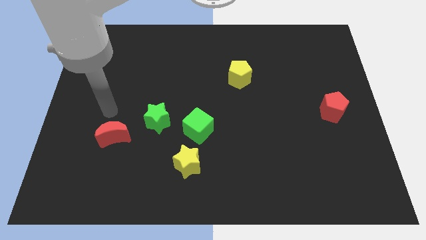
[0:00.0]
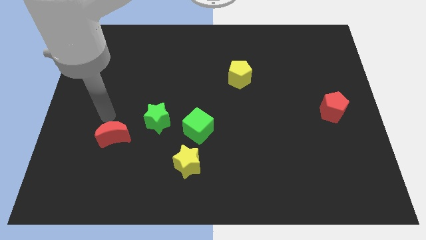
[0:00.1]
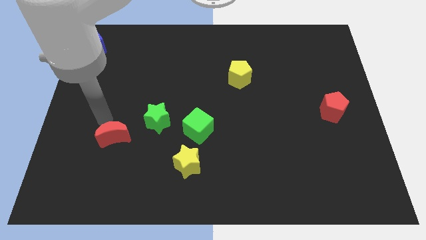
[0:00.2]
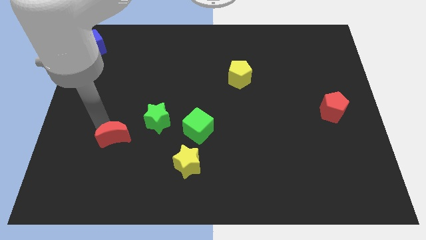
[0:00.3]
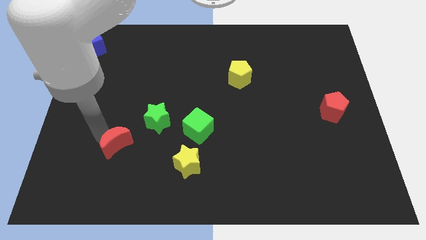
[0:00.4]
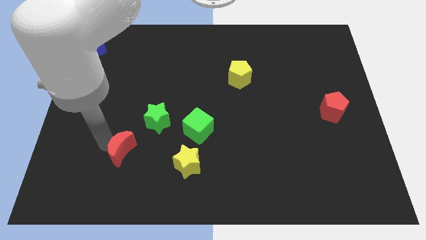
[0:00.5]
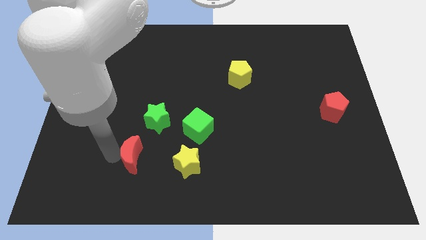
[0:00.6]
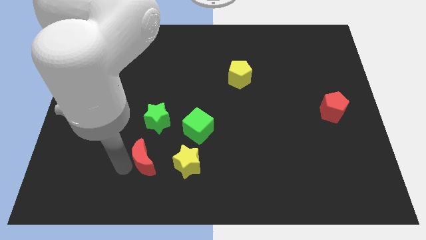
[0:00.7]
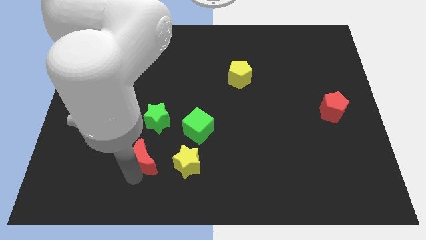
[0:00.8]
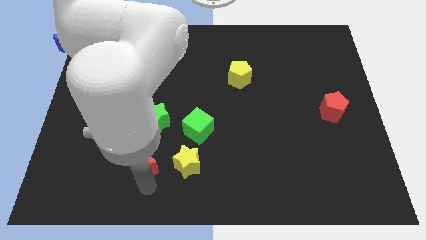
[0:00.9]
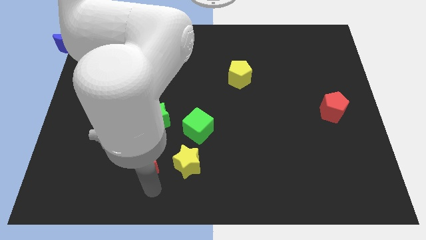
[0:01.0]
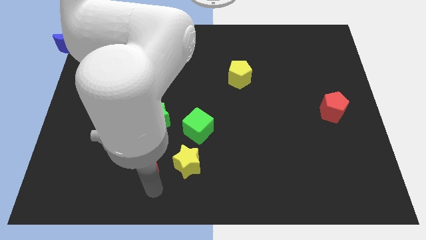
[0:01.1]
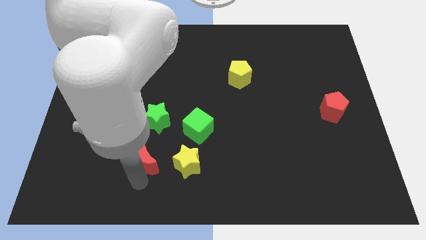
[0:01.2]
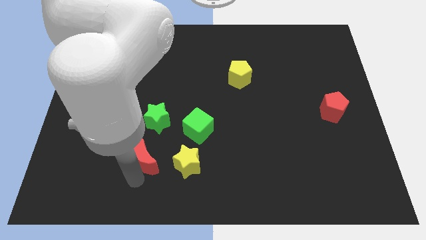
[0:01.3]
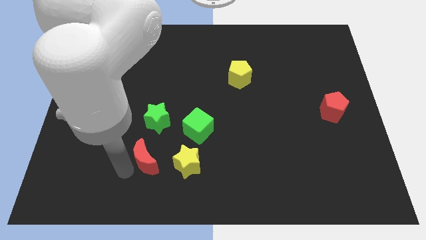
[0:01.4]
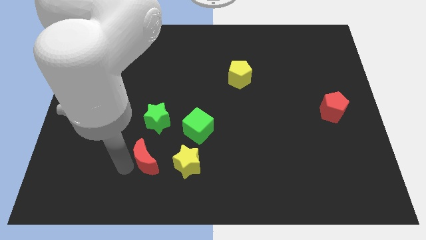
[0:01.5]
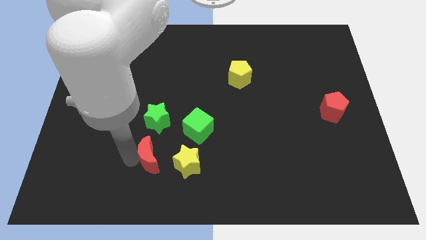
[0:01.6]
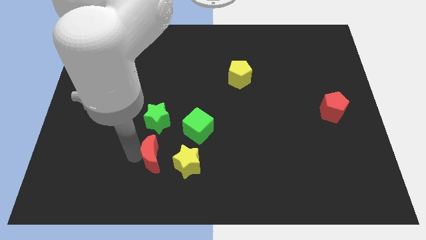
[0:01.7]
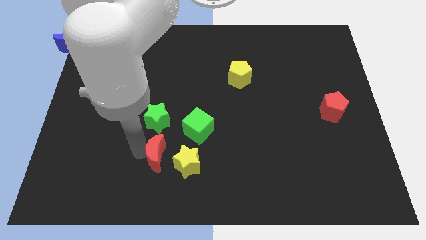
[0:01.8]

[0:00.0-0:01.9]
place the red moon at the left side of the yellow star

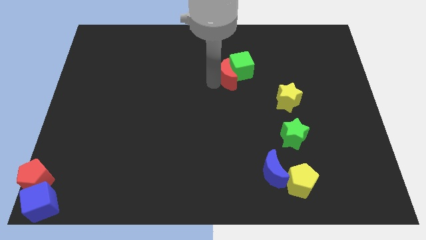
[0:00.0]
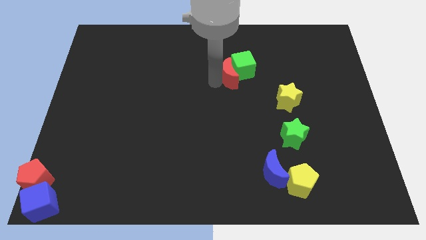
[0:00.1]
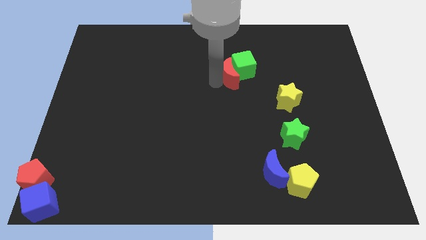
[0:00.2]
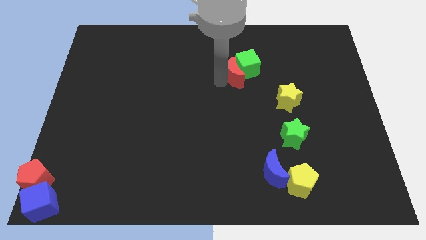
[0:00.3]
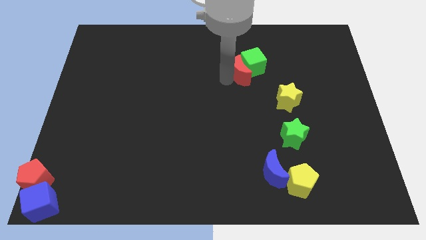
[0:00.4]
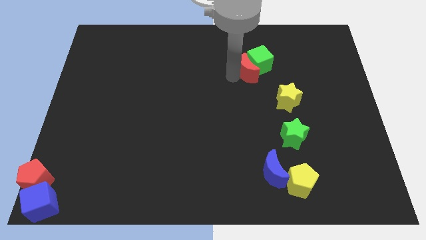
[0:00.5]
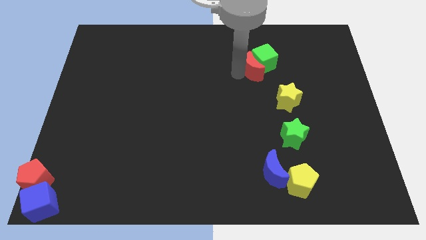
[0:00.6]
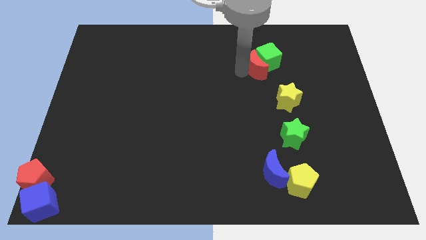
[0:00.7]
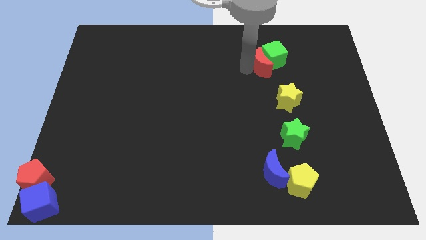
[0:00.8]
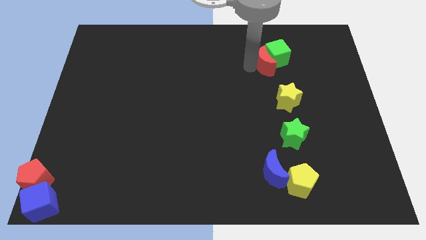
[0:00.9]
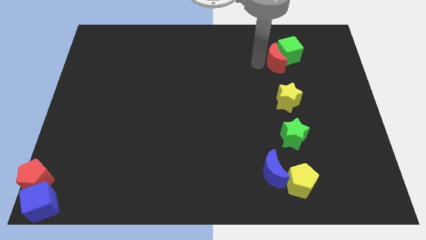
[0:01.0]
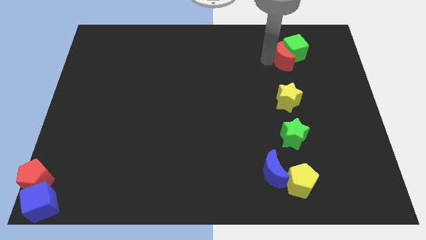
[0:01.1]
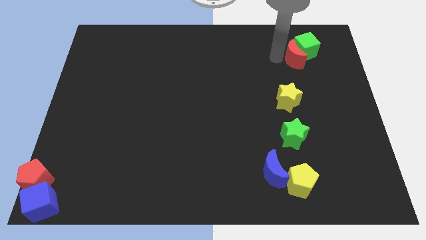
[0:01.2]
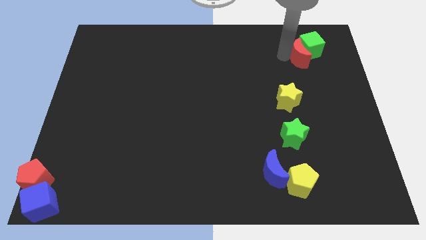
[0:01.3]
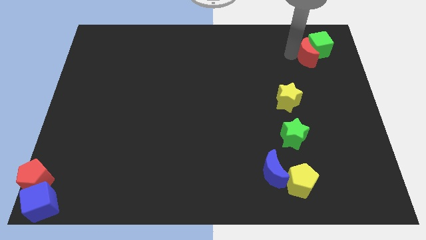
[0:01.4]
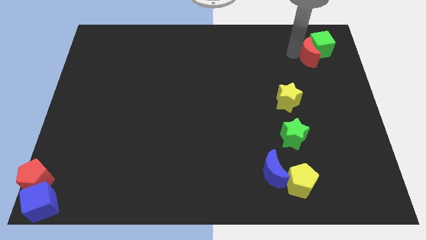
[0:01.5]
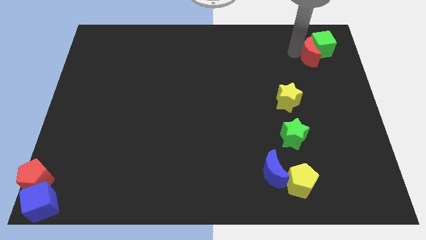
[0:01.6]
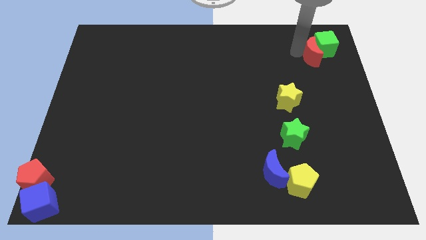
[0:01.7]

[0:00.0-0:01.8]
slide the green cube and red moon to the top right

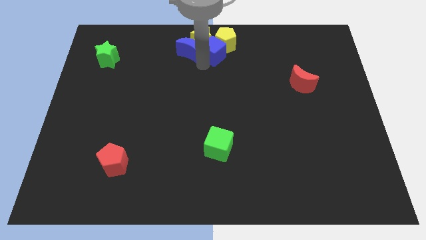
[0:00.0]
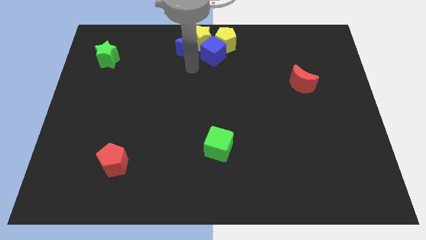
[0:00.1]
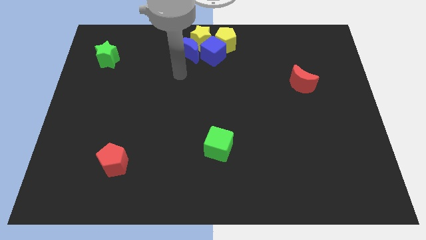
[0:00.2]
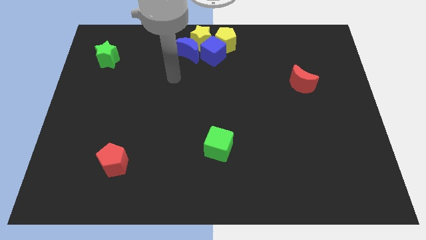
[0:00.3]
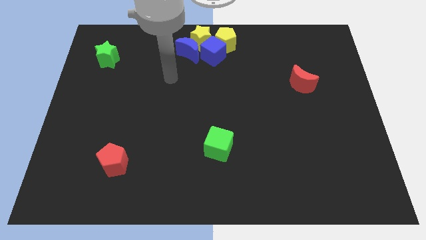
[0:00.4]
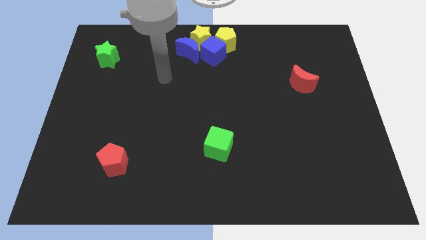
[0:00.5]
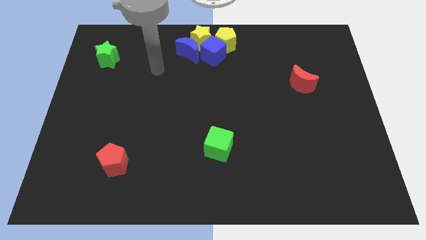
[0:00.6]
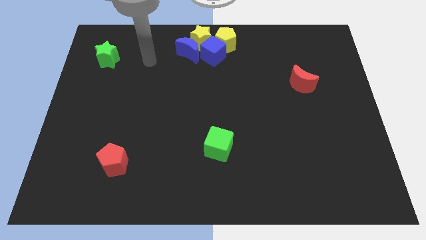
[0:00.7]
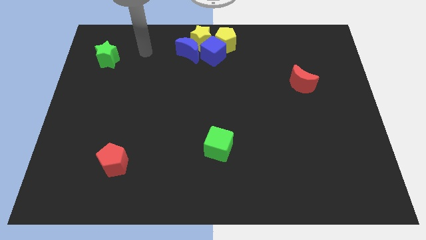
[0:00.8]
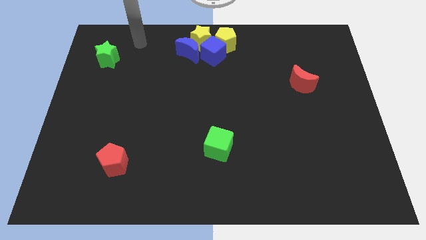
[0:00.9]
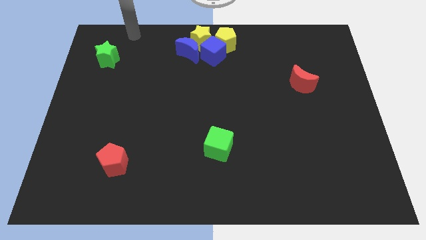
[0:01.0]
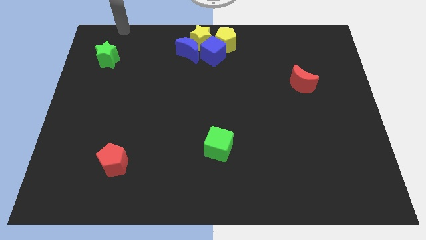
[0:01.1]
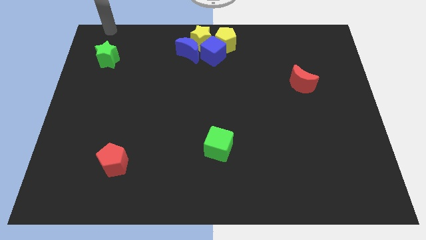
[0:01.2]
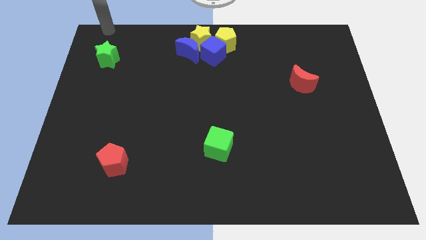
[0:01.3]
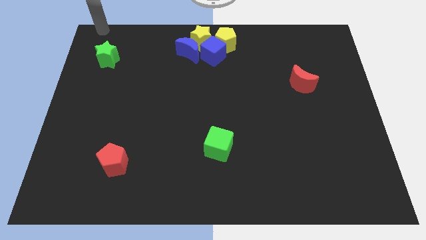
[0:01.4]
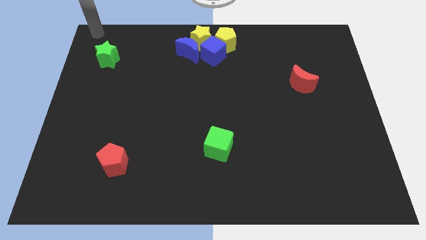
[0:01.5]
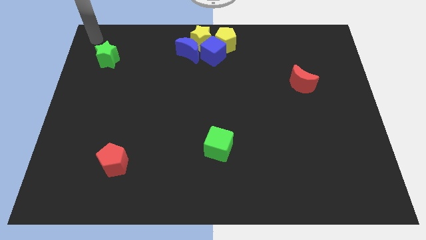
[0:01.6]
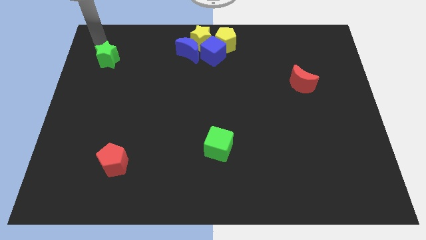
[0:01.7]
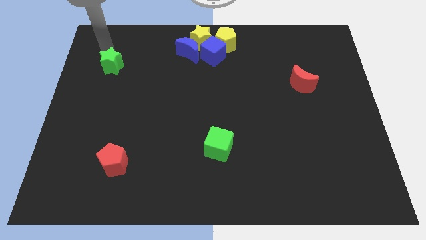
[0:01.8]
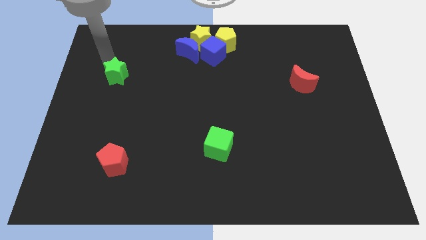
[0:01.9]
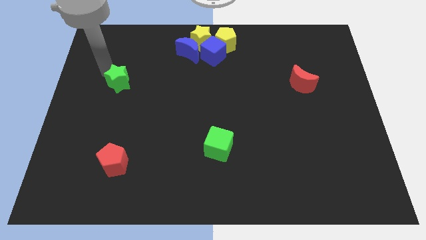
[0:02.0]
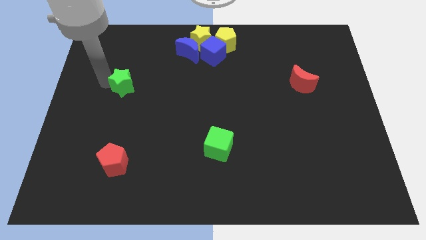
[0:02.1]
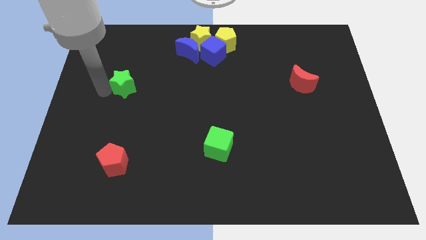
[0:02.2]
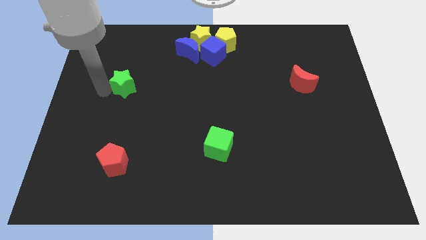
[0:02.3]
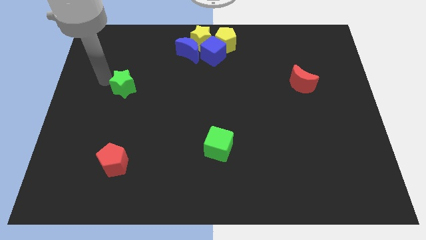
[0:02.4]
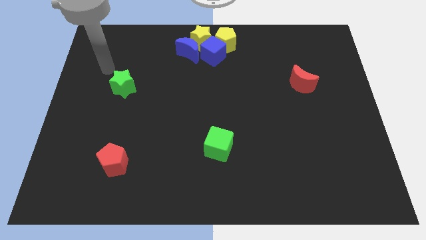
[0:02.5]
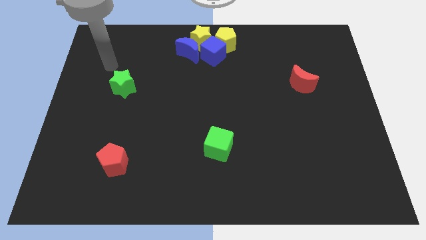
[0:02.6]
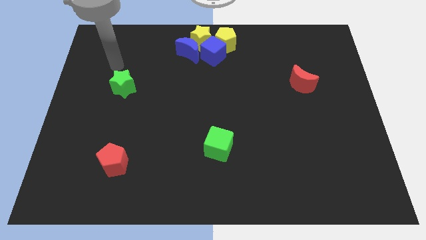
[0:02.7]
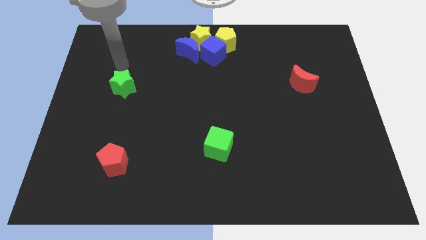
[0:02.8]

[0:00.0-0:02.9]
move the green star parallel to the red pentagon

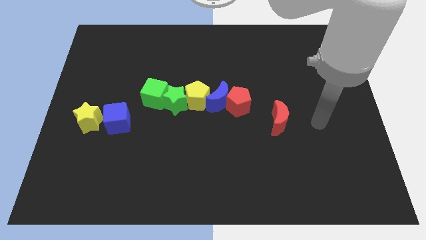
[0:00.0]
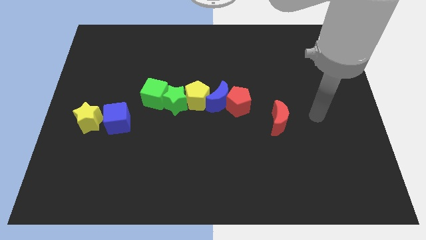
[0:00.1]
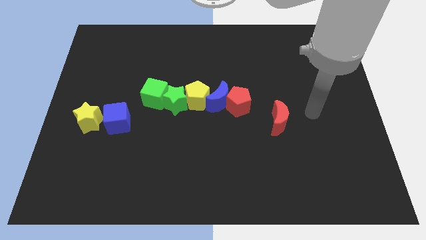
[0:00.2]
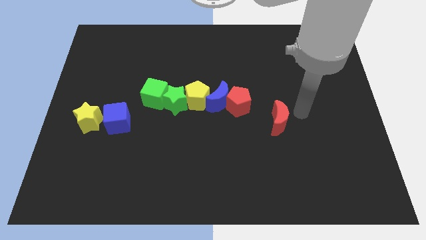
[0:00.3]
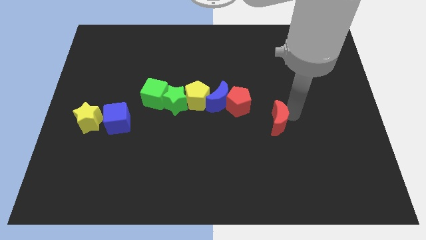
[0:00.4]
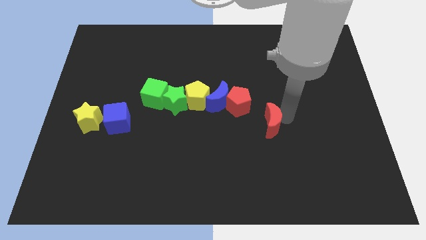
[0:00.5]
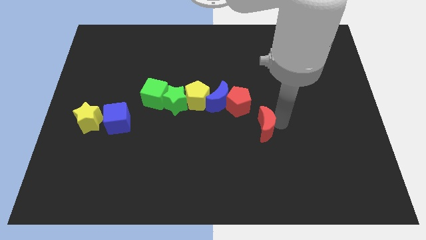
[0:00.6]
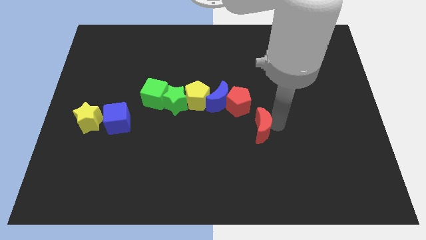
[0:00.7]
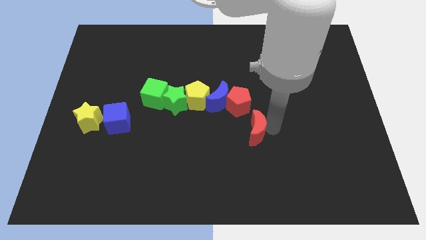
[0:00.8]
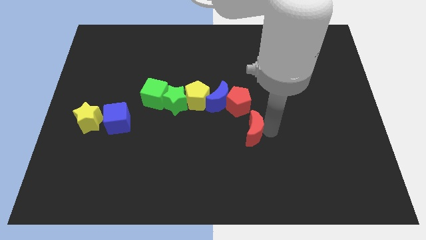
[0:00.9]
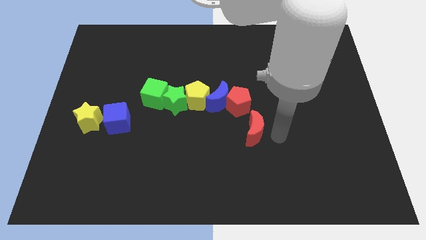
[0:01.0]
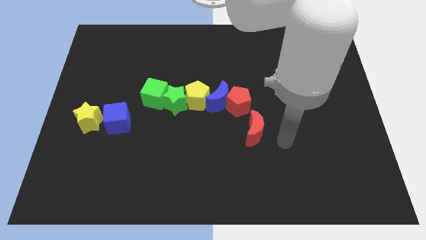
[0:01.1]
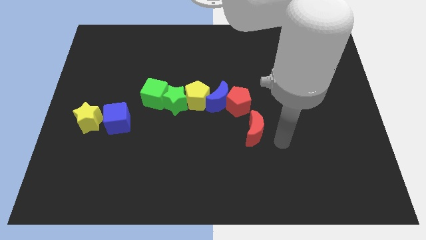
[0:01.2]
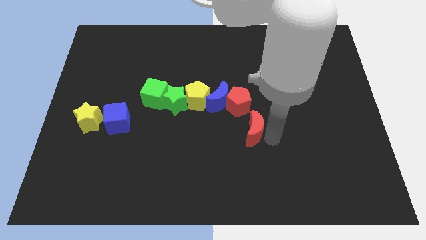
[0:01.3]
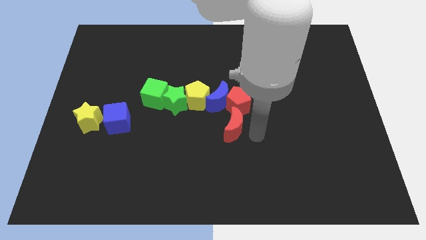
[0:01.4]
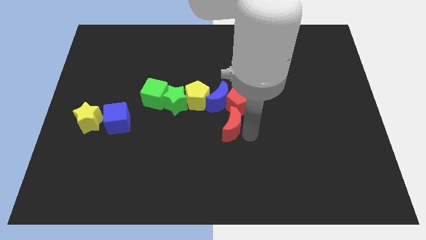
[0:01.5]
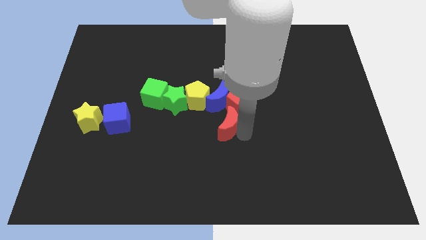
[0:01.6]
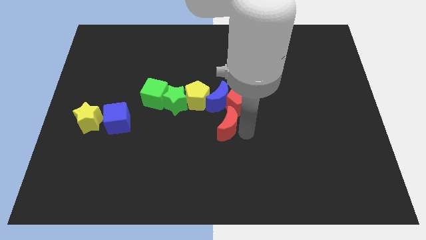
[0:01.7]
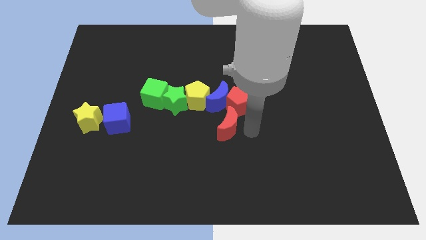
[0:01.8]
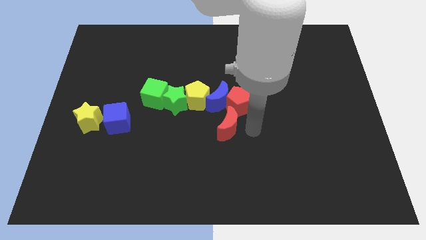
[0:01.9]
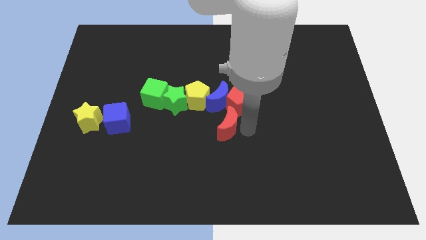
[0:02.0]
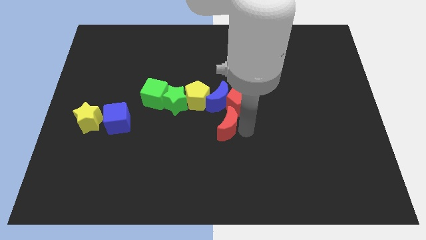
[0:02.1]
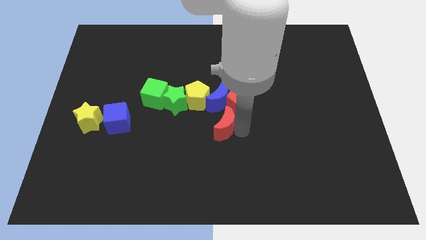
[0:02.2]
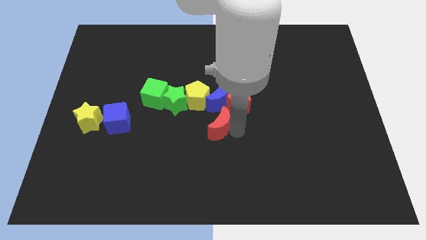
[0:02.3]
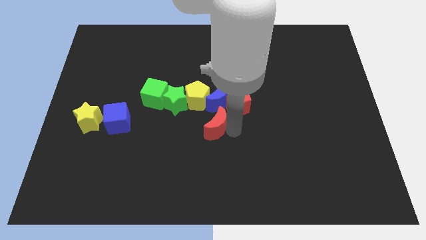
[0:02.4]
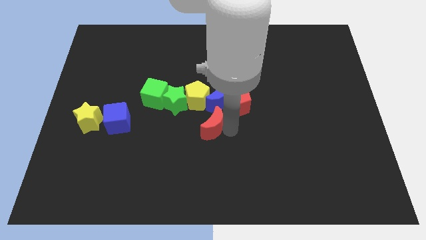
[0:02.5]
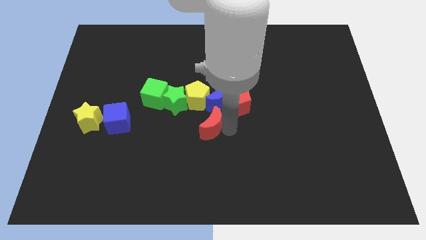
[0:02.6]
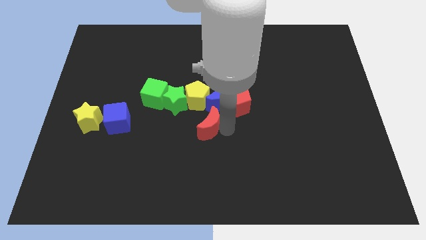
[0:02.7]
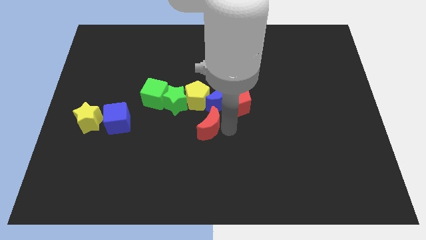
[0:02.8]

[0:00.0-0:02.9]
push red crescent below blue crescent
